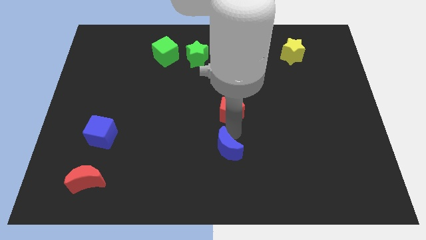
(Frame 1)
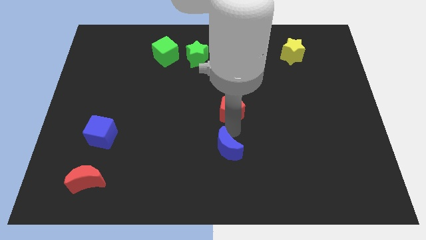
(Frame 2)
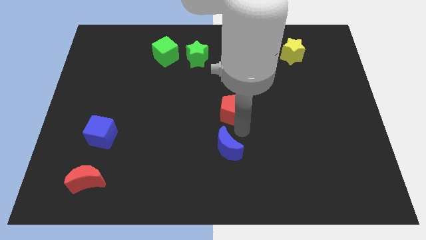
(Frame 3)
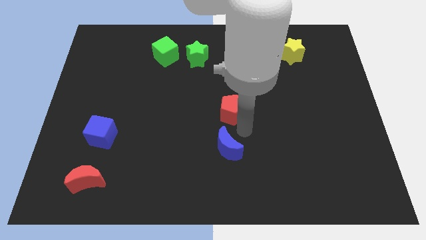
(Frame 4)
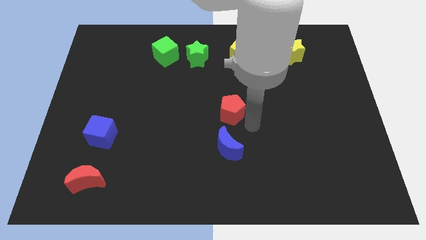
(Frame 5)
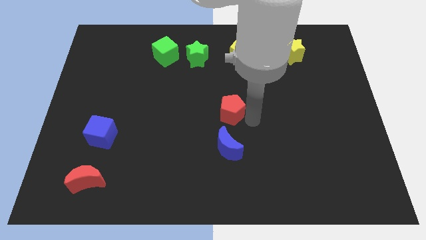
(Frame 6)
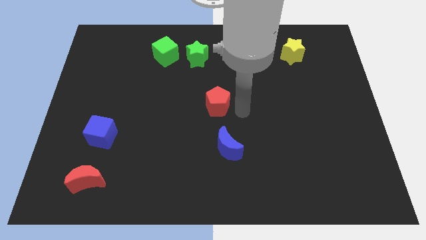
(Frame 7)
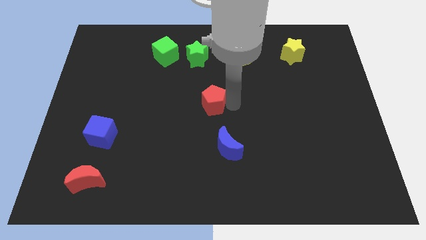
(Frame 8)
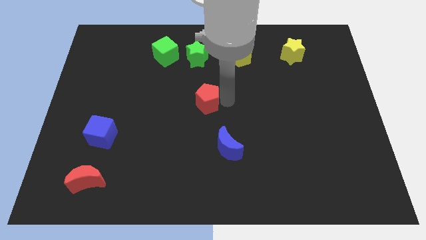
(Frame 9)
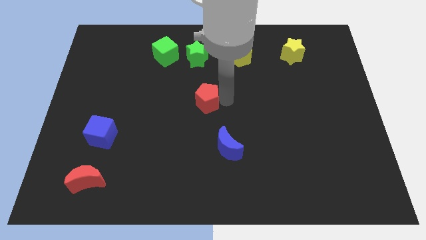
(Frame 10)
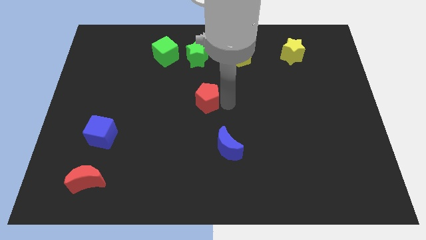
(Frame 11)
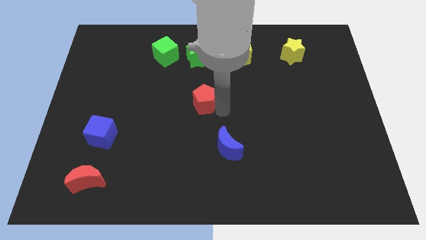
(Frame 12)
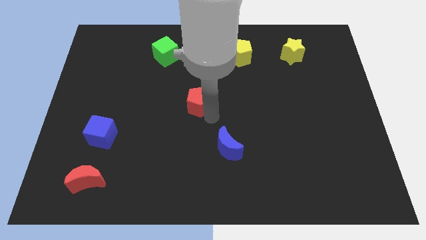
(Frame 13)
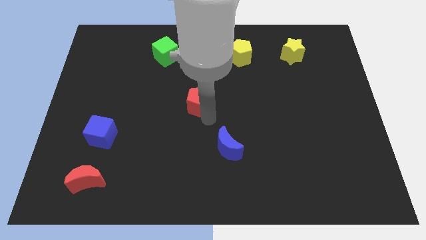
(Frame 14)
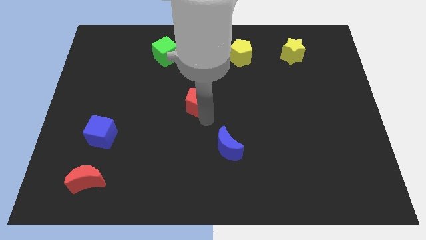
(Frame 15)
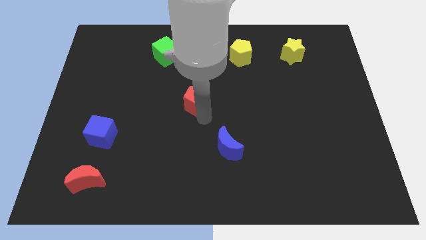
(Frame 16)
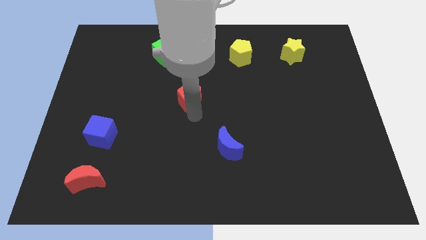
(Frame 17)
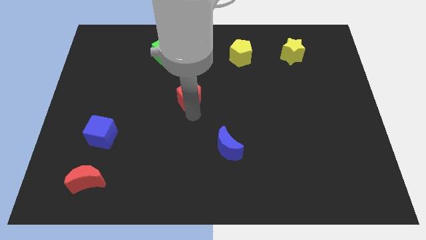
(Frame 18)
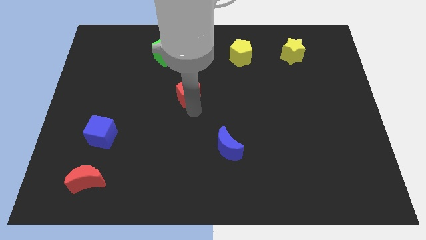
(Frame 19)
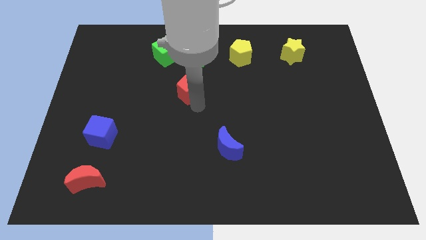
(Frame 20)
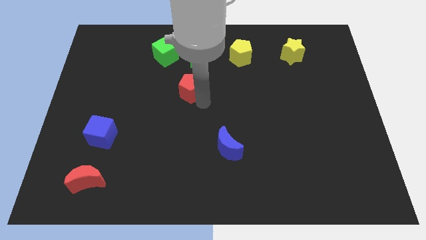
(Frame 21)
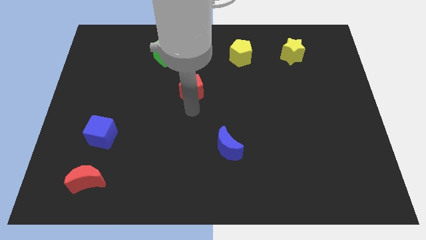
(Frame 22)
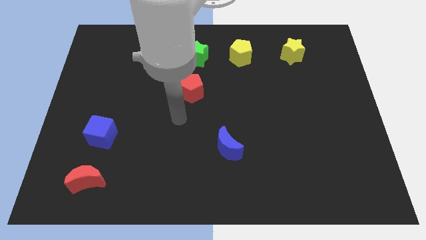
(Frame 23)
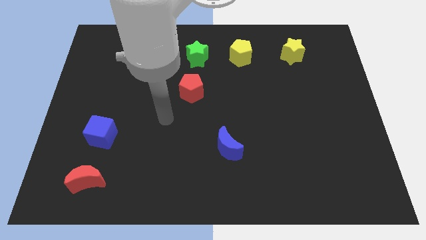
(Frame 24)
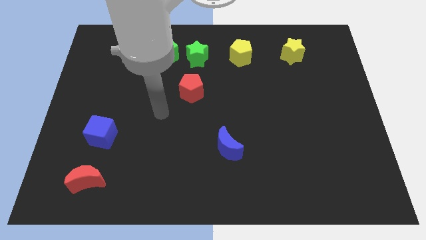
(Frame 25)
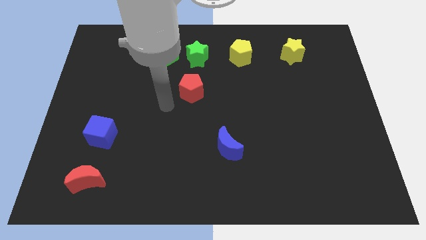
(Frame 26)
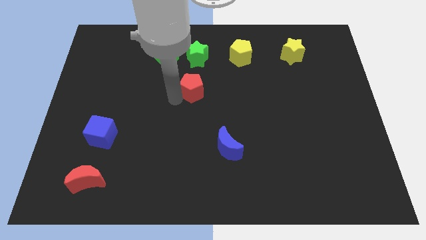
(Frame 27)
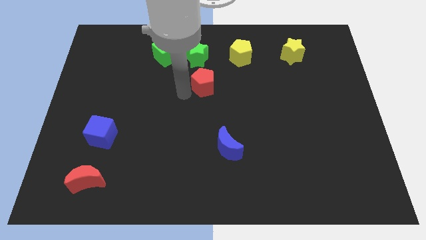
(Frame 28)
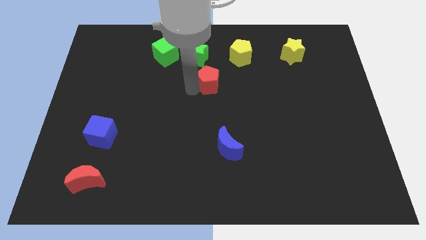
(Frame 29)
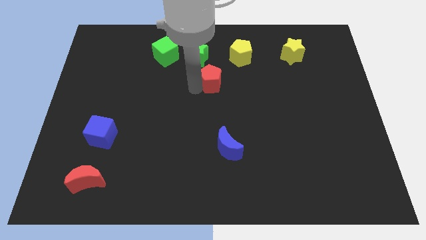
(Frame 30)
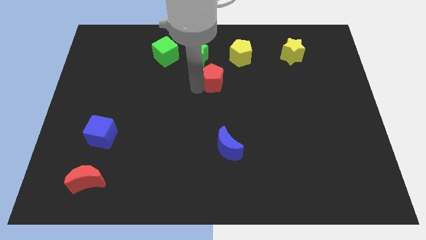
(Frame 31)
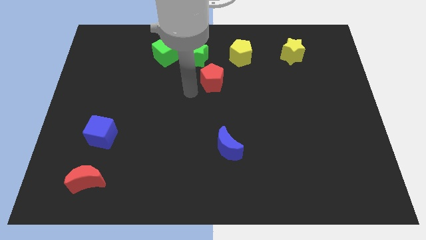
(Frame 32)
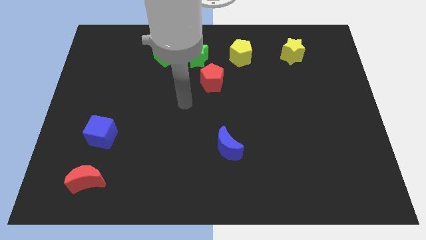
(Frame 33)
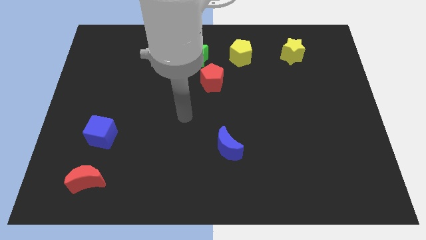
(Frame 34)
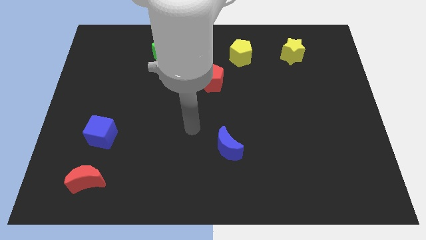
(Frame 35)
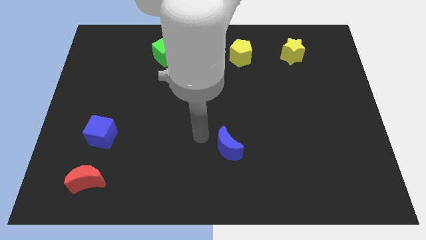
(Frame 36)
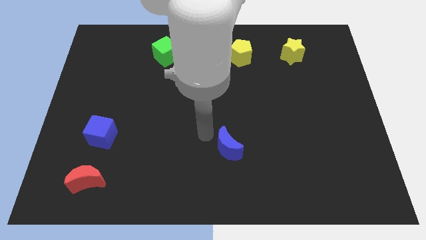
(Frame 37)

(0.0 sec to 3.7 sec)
move the red pentagon diagonally bottom left to the yellow pentagon

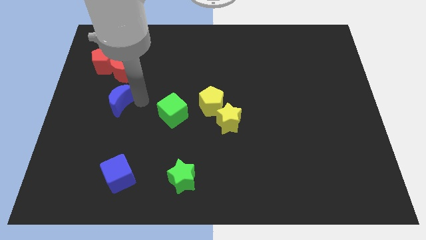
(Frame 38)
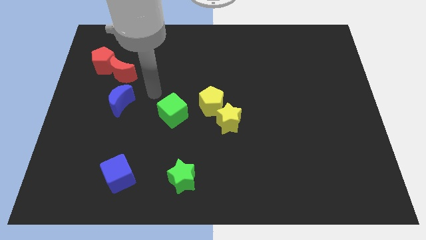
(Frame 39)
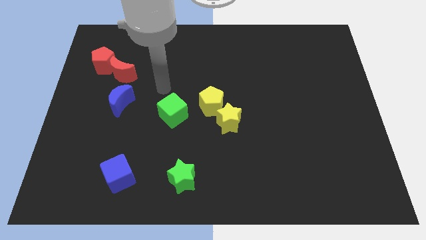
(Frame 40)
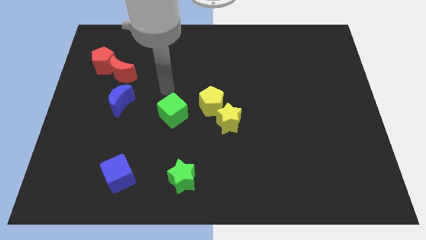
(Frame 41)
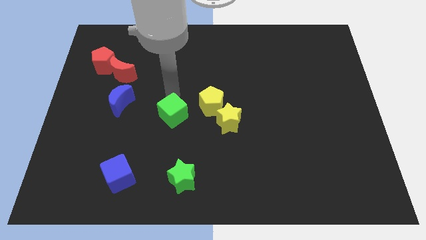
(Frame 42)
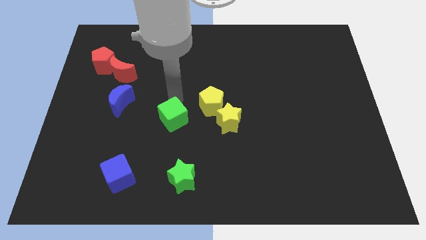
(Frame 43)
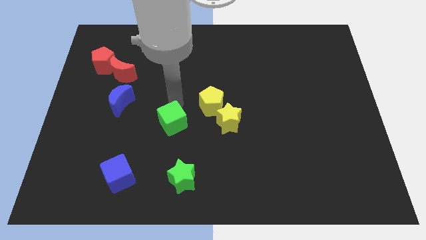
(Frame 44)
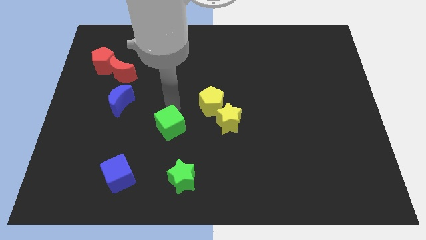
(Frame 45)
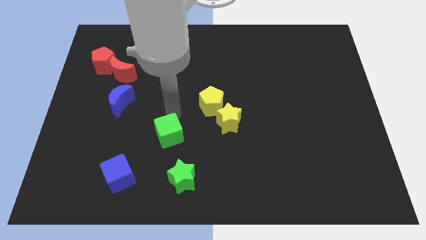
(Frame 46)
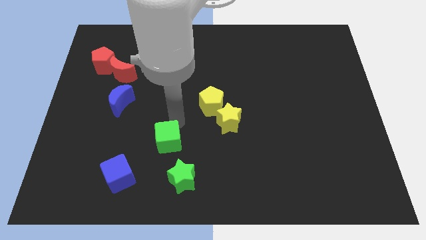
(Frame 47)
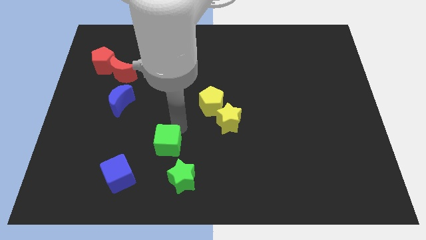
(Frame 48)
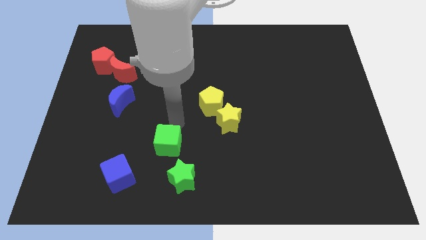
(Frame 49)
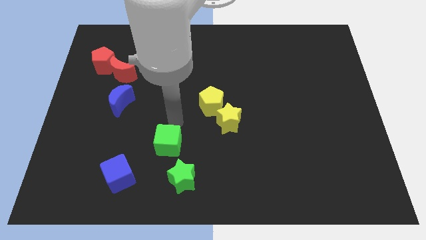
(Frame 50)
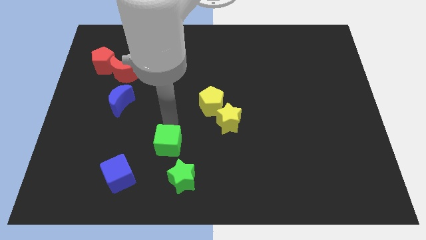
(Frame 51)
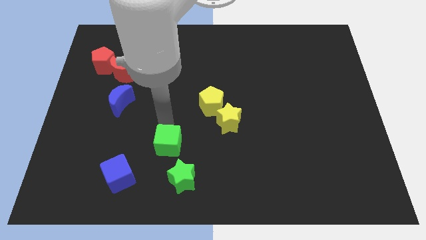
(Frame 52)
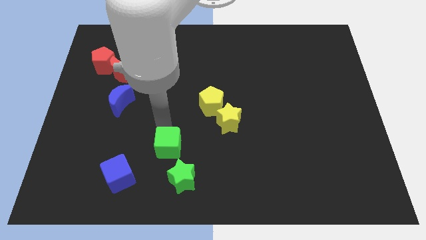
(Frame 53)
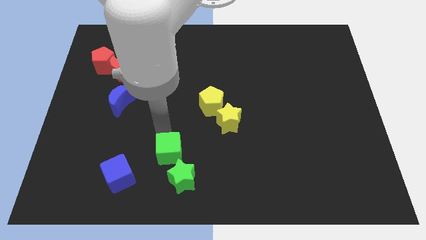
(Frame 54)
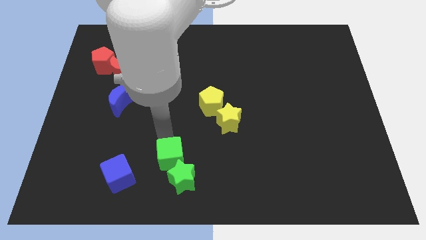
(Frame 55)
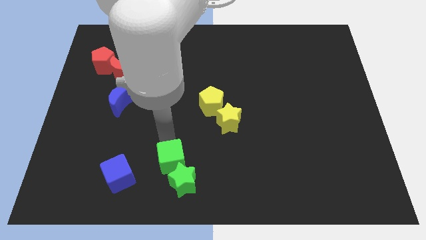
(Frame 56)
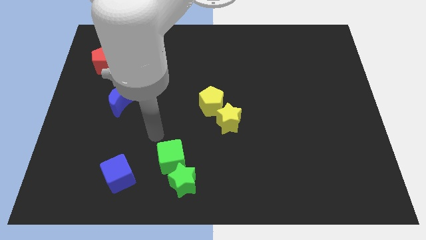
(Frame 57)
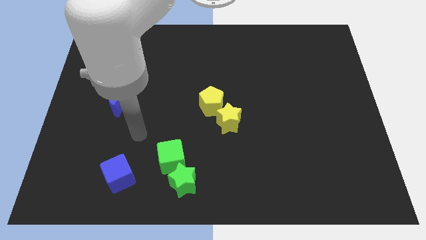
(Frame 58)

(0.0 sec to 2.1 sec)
push the green cube into the green star

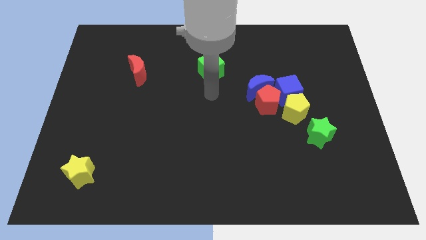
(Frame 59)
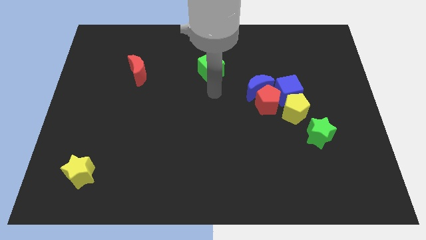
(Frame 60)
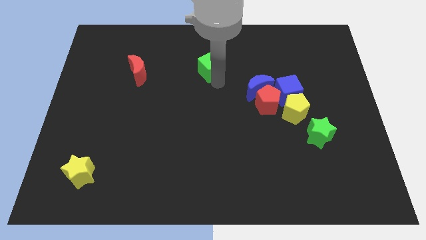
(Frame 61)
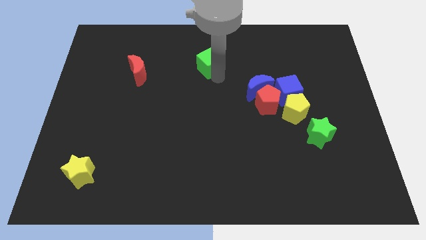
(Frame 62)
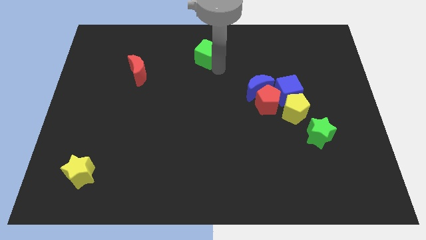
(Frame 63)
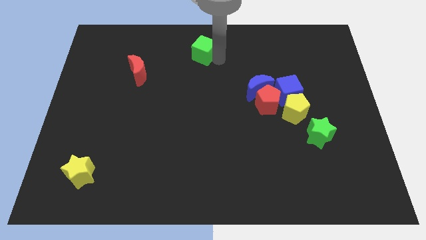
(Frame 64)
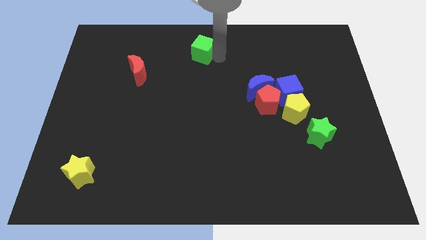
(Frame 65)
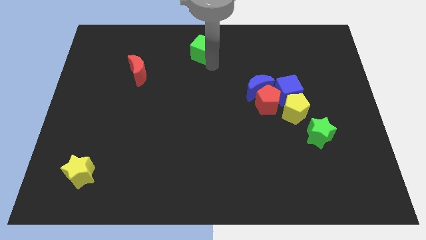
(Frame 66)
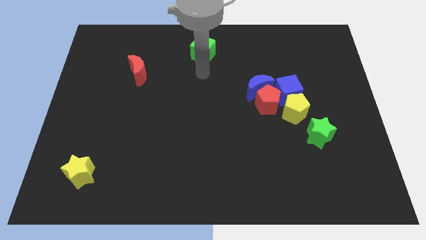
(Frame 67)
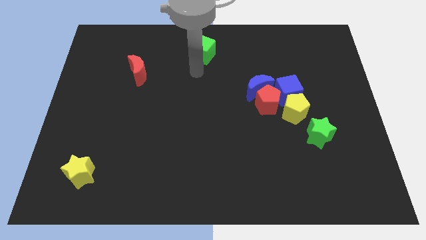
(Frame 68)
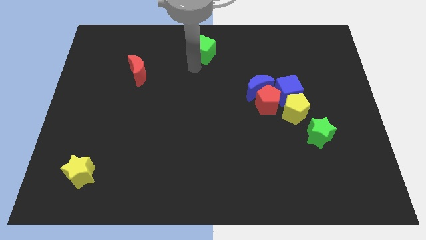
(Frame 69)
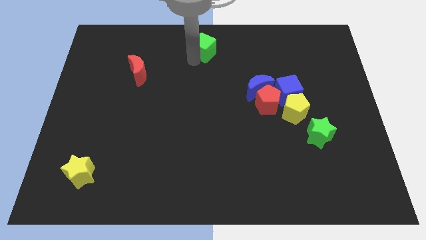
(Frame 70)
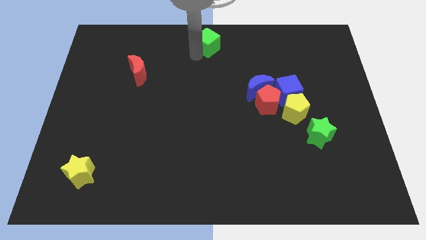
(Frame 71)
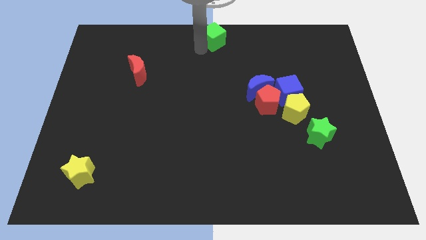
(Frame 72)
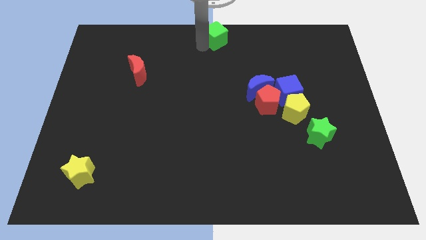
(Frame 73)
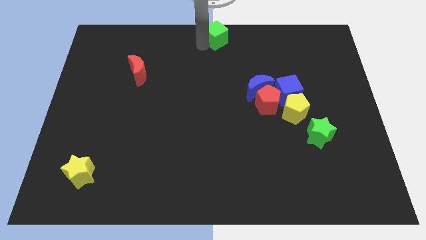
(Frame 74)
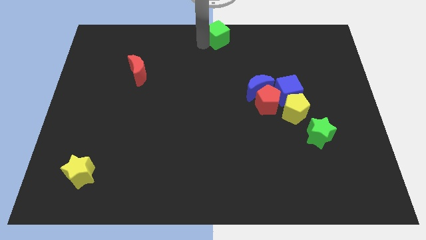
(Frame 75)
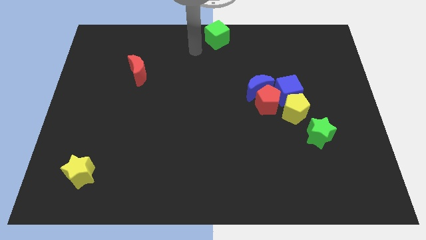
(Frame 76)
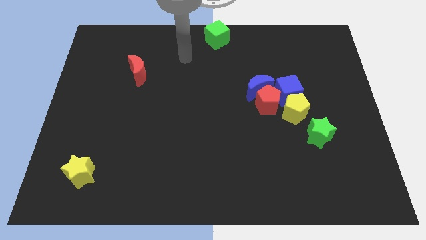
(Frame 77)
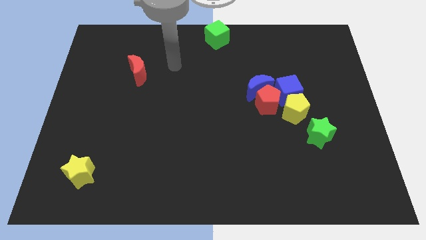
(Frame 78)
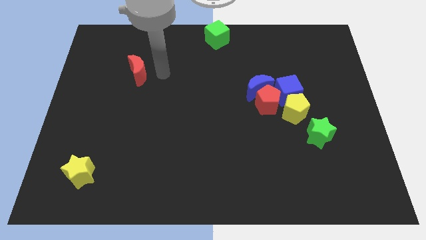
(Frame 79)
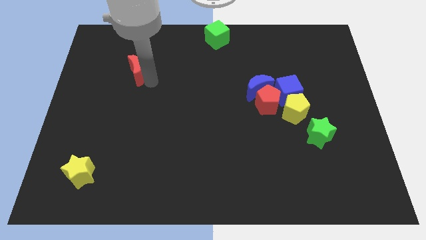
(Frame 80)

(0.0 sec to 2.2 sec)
place the green cube at the top center of the board

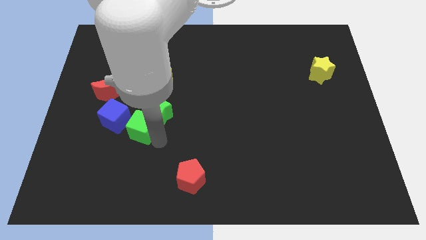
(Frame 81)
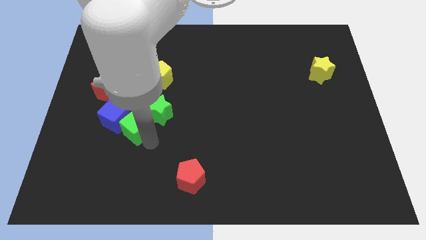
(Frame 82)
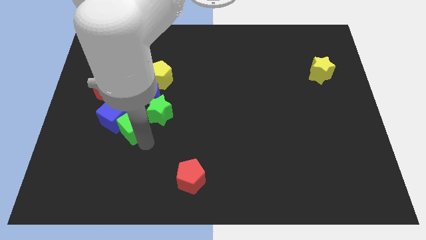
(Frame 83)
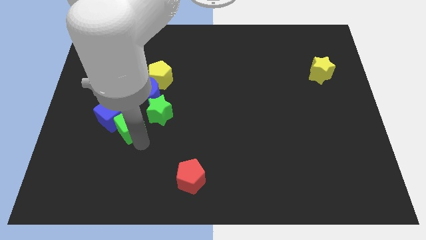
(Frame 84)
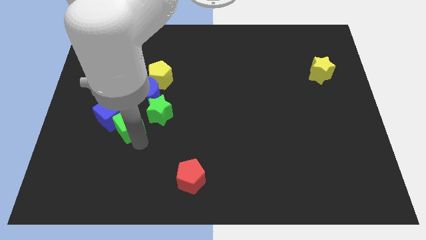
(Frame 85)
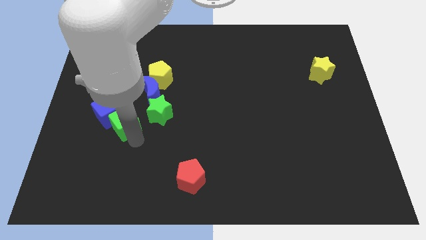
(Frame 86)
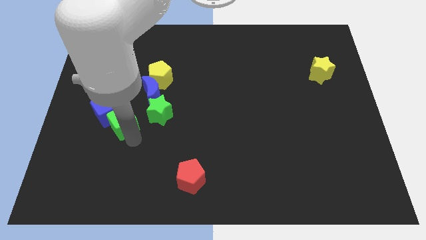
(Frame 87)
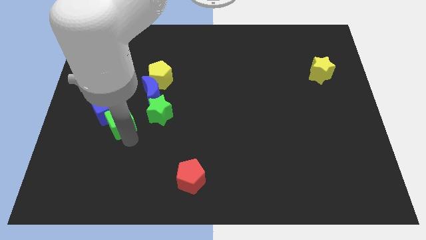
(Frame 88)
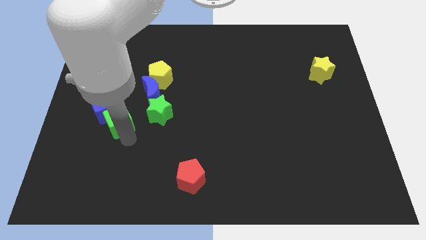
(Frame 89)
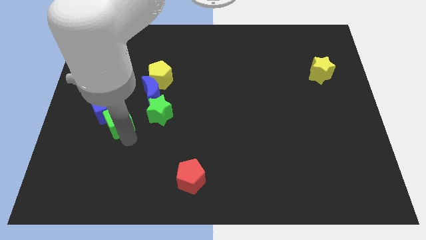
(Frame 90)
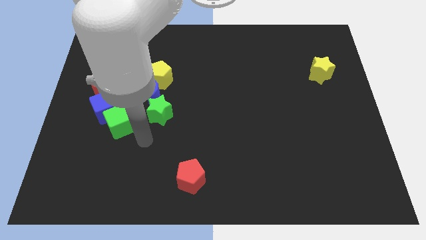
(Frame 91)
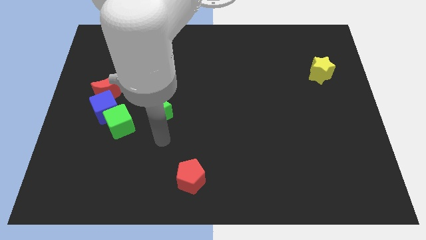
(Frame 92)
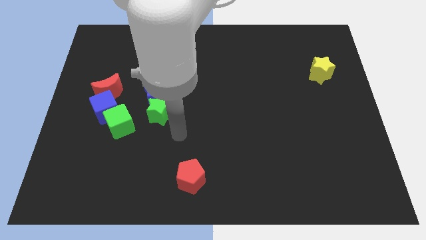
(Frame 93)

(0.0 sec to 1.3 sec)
move the green cube below the blue cube
